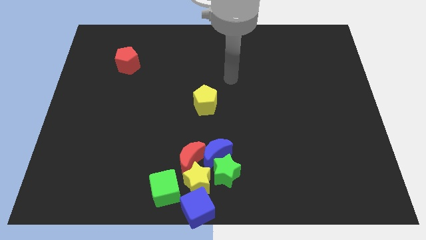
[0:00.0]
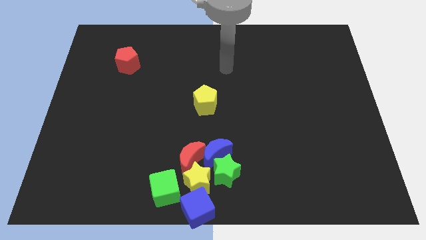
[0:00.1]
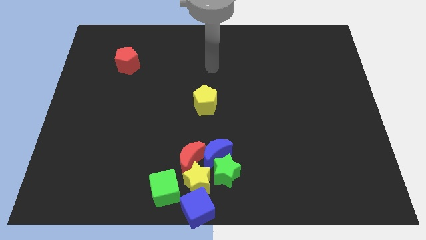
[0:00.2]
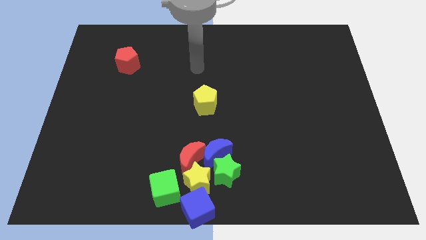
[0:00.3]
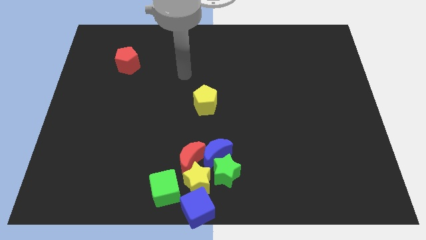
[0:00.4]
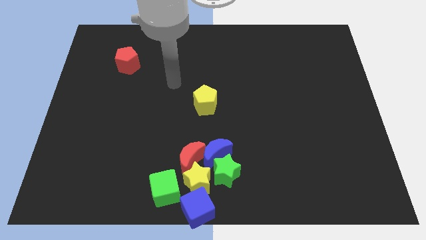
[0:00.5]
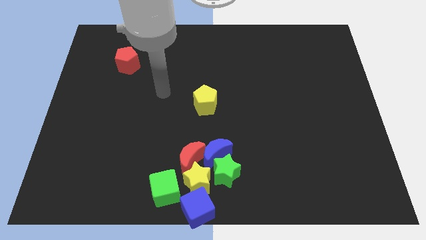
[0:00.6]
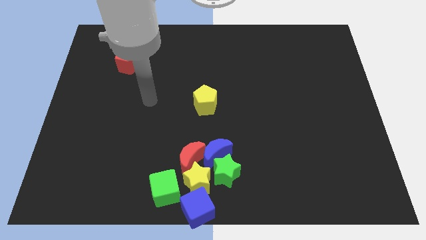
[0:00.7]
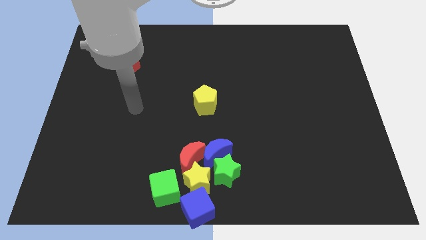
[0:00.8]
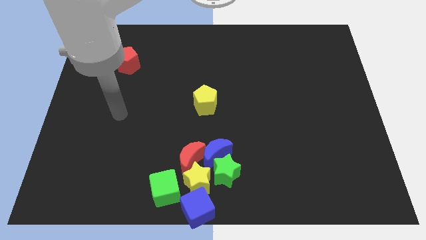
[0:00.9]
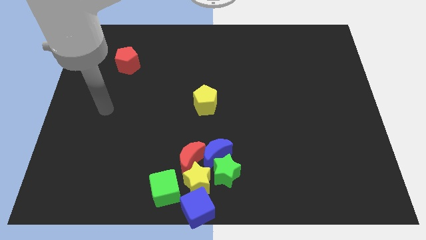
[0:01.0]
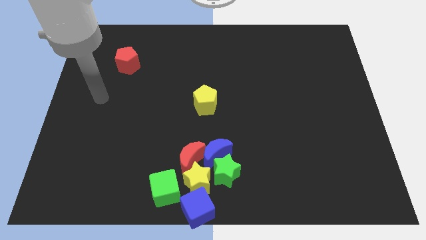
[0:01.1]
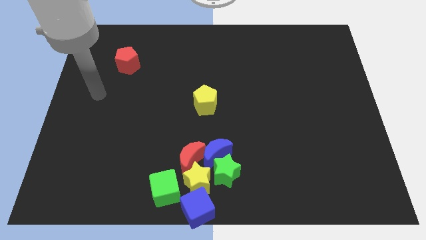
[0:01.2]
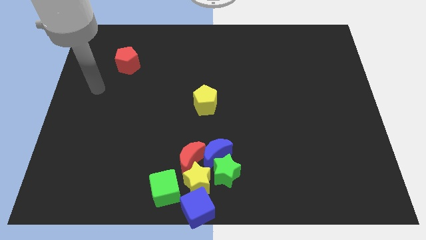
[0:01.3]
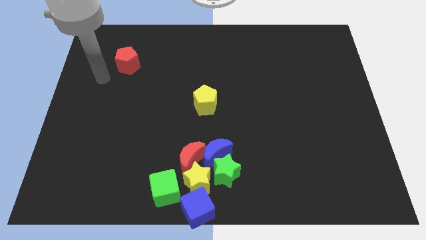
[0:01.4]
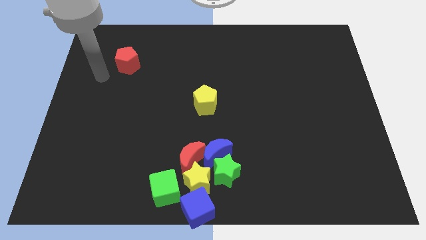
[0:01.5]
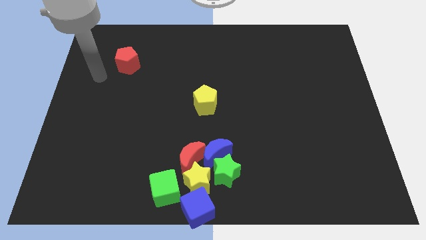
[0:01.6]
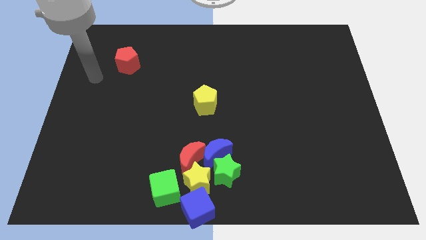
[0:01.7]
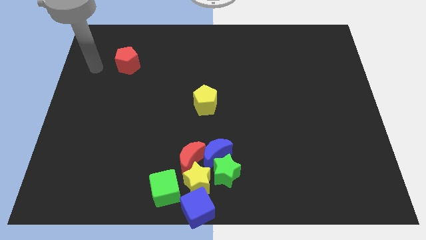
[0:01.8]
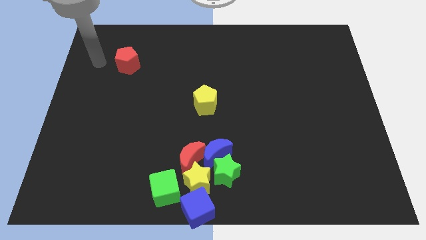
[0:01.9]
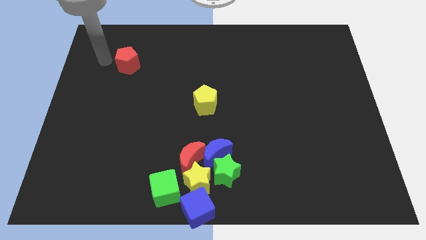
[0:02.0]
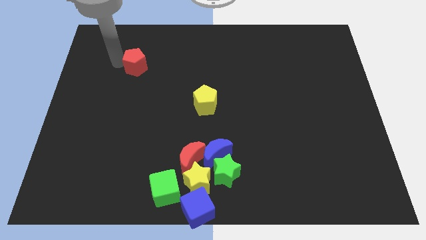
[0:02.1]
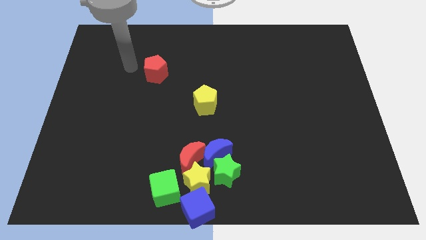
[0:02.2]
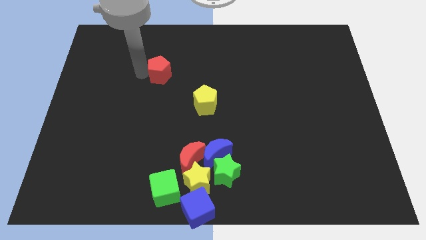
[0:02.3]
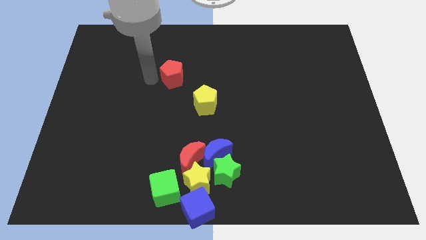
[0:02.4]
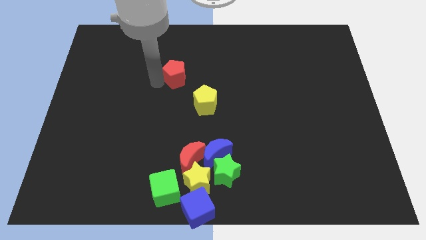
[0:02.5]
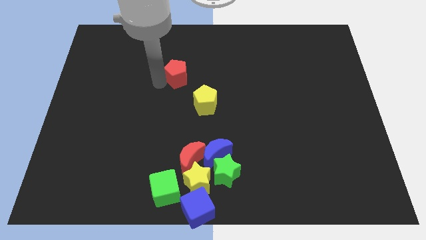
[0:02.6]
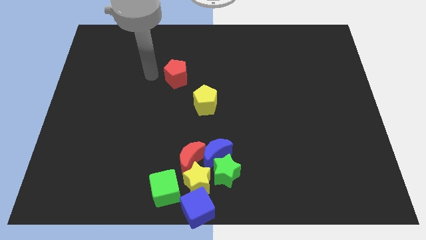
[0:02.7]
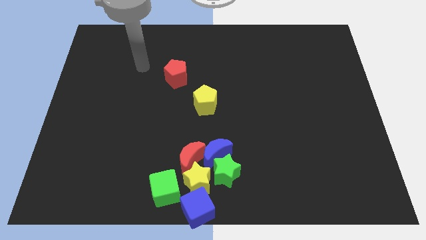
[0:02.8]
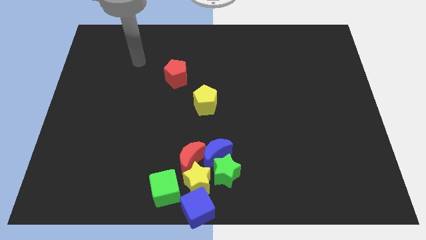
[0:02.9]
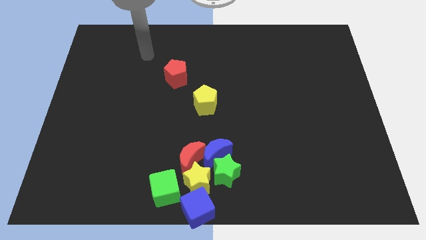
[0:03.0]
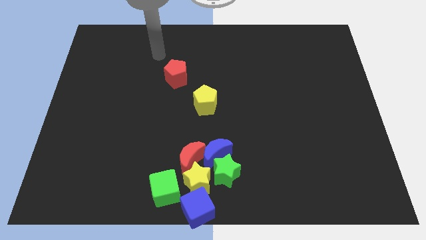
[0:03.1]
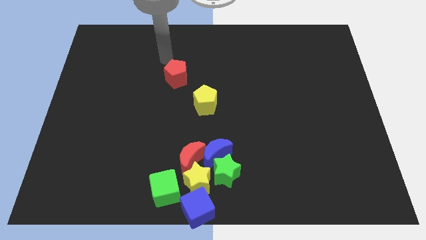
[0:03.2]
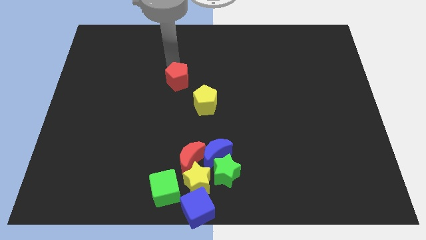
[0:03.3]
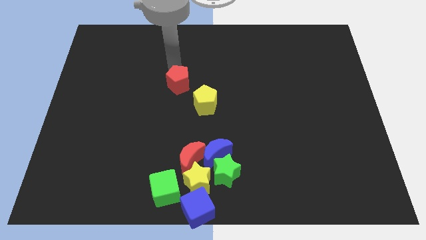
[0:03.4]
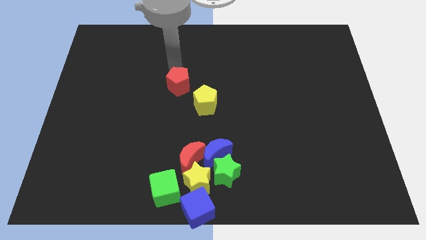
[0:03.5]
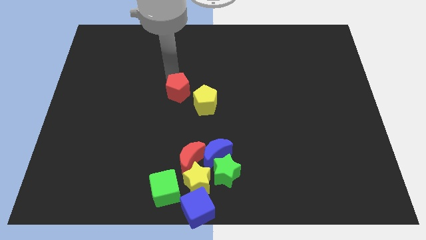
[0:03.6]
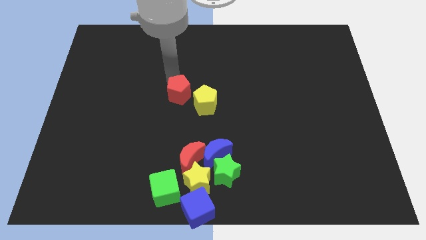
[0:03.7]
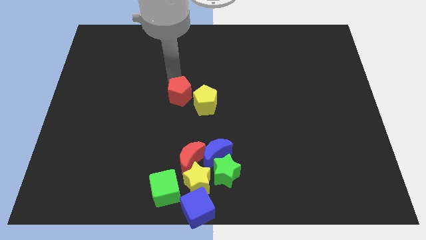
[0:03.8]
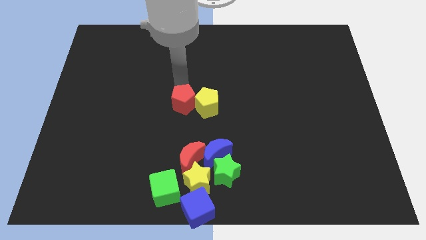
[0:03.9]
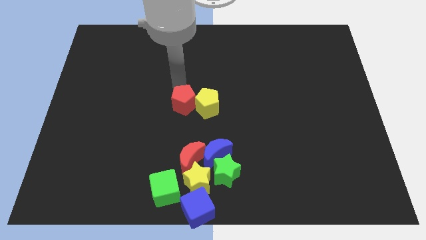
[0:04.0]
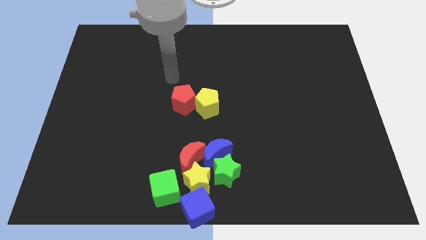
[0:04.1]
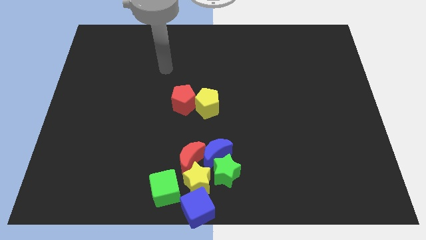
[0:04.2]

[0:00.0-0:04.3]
move the red pentagon to the center of the board

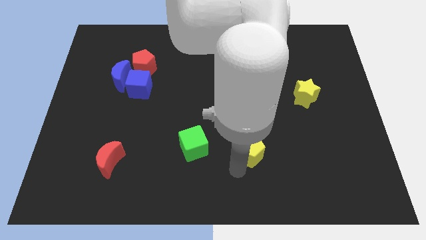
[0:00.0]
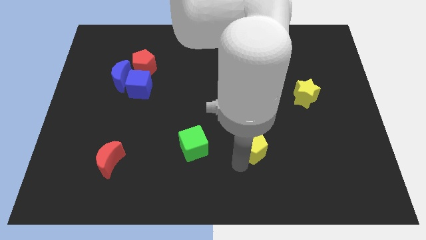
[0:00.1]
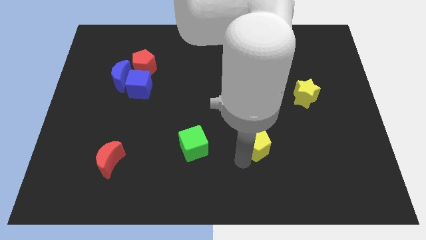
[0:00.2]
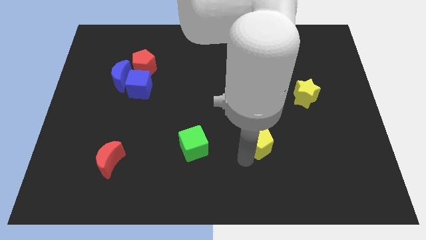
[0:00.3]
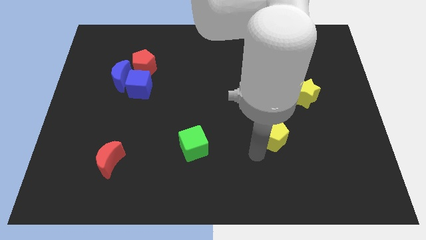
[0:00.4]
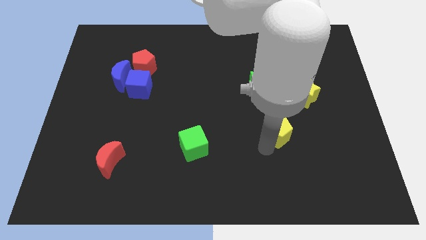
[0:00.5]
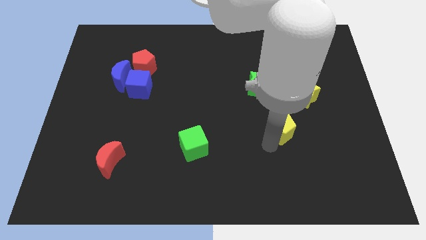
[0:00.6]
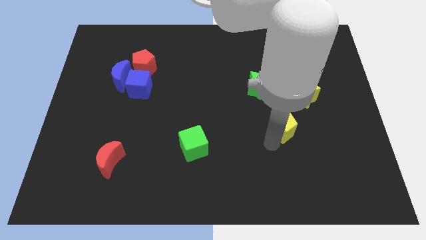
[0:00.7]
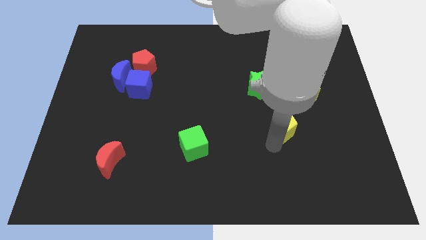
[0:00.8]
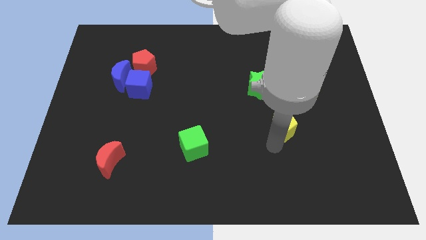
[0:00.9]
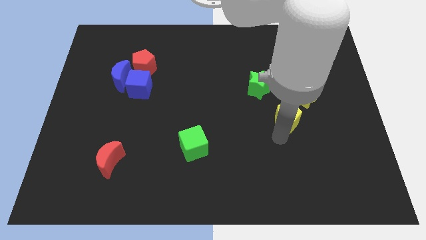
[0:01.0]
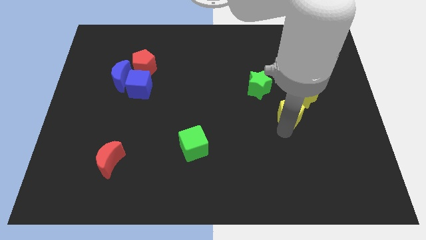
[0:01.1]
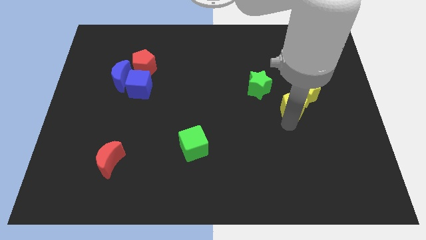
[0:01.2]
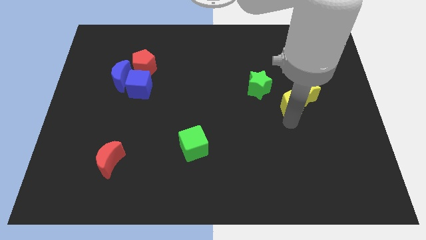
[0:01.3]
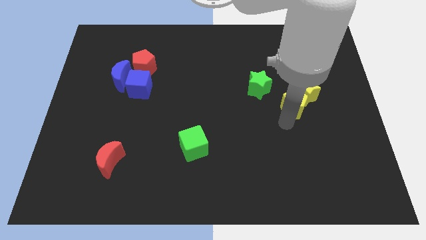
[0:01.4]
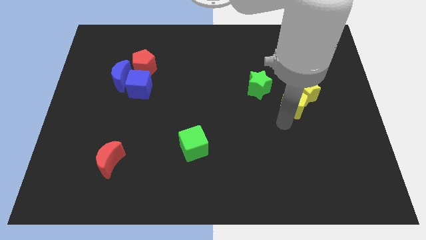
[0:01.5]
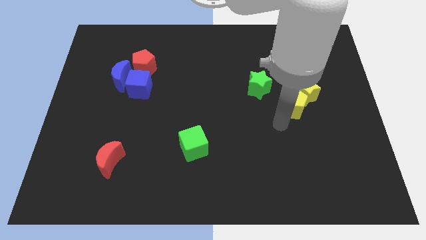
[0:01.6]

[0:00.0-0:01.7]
push the yellow pentagon towards the left bottom of yellow star

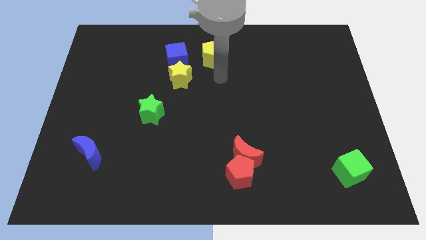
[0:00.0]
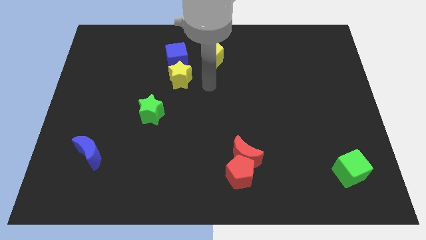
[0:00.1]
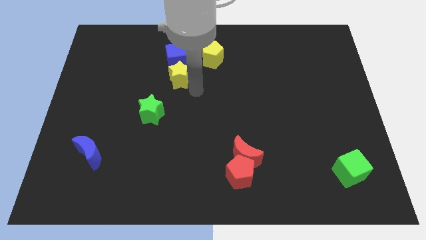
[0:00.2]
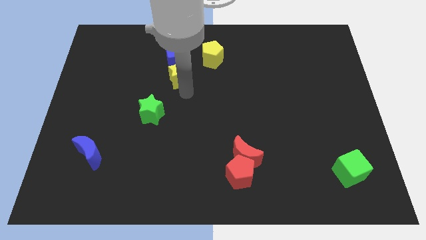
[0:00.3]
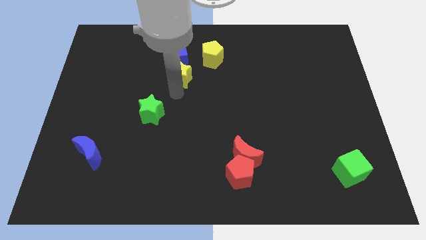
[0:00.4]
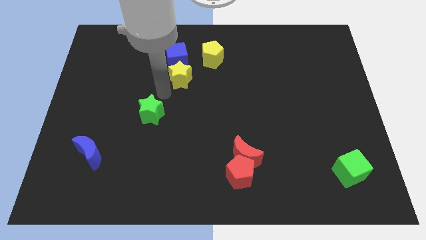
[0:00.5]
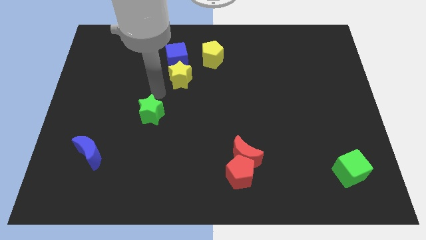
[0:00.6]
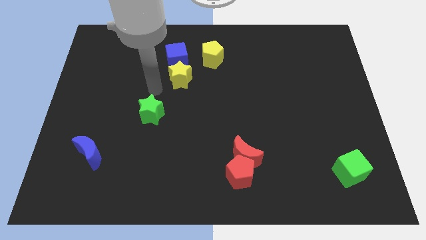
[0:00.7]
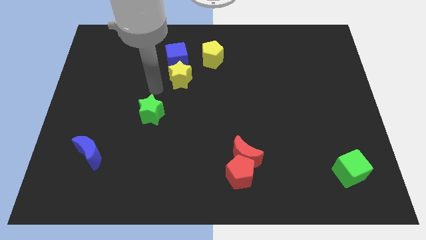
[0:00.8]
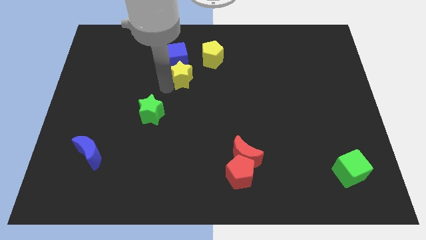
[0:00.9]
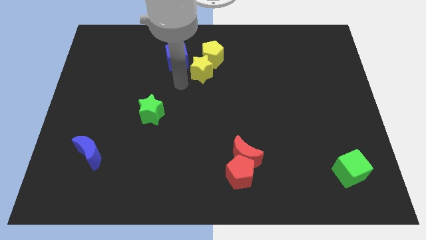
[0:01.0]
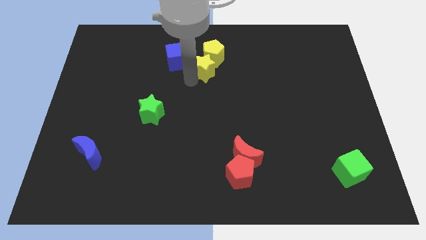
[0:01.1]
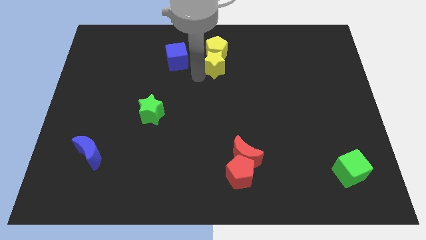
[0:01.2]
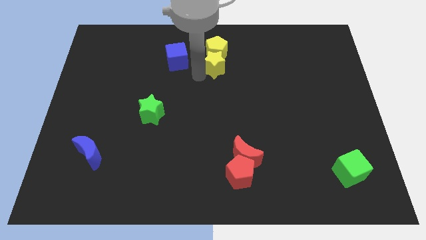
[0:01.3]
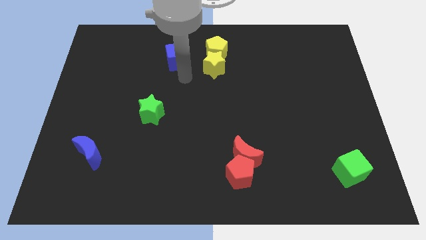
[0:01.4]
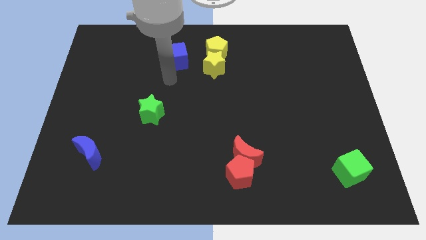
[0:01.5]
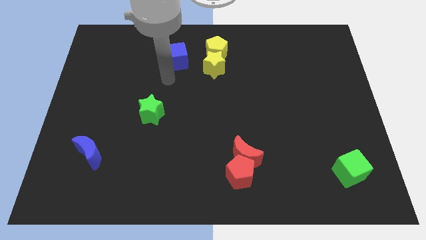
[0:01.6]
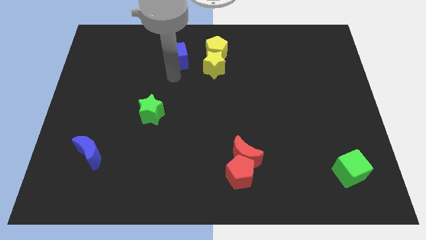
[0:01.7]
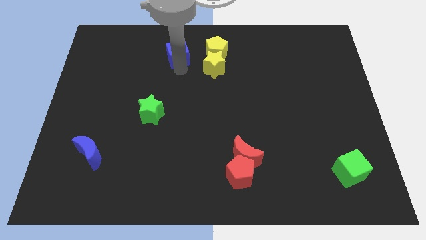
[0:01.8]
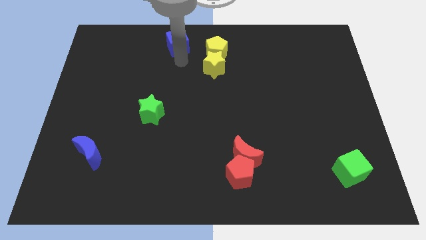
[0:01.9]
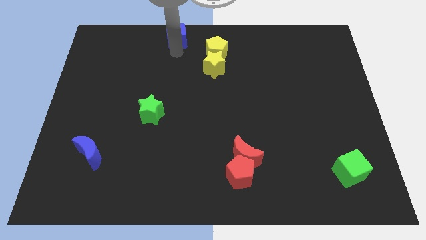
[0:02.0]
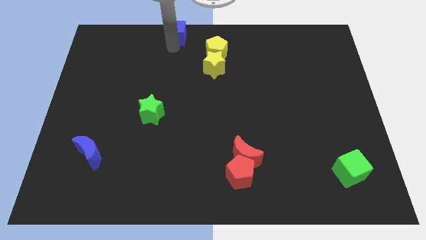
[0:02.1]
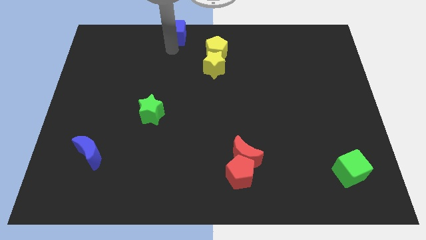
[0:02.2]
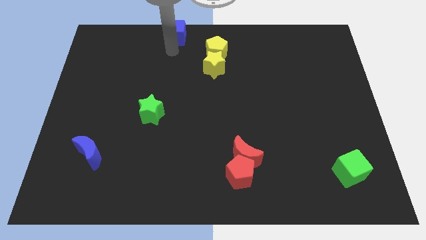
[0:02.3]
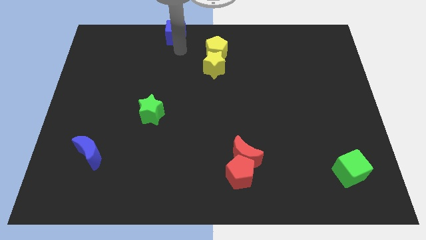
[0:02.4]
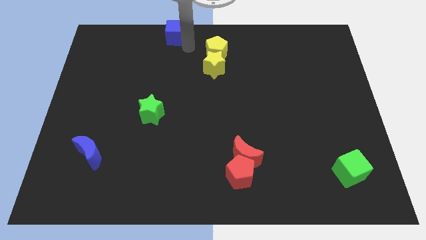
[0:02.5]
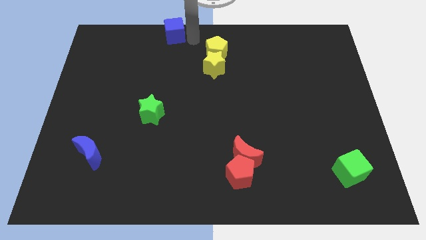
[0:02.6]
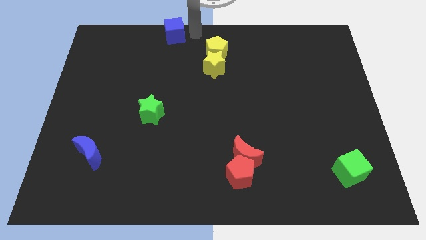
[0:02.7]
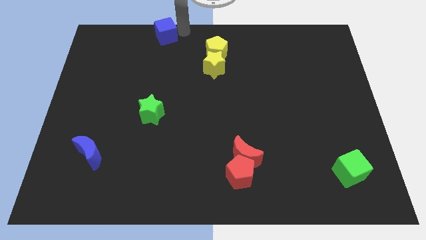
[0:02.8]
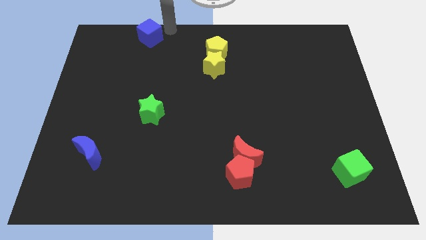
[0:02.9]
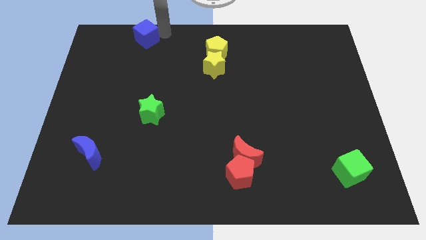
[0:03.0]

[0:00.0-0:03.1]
slide the yellow blocks together to the top center
